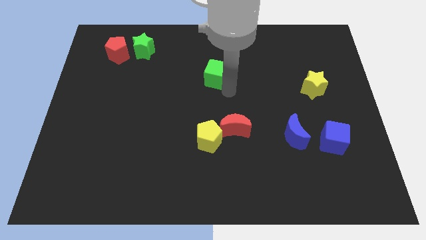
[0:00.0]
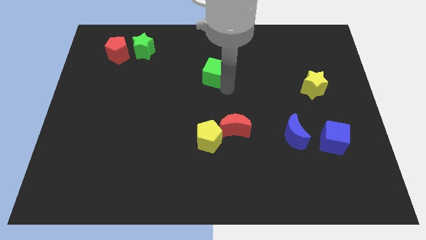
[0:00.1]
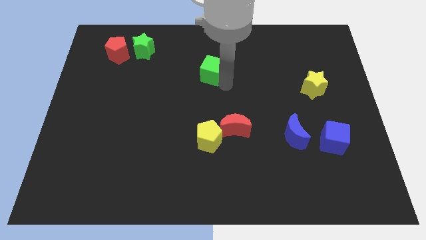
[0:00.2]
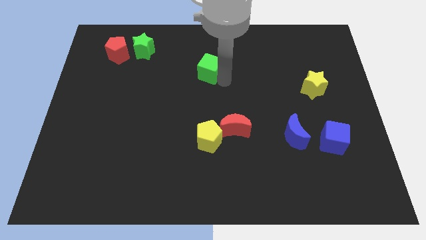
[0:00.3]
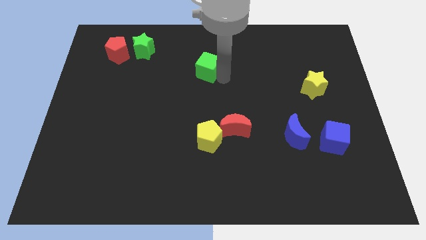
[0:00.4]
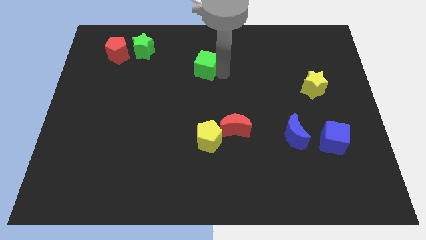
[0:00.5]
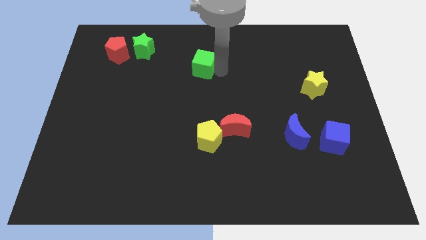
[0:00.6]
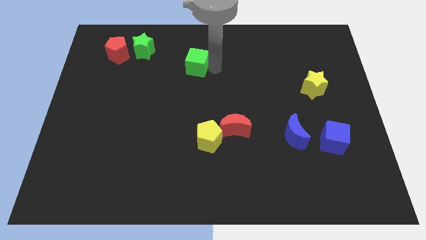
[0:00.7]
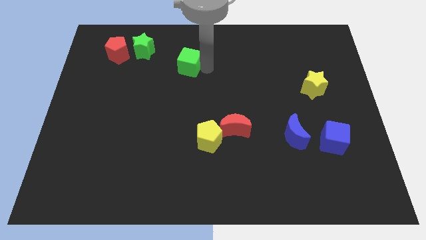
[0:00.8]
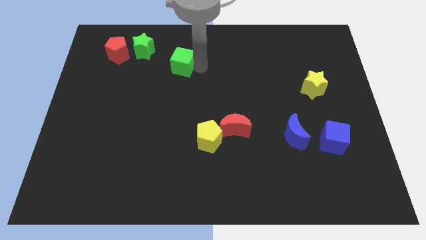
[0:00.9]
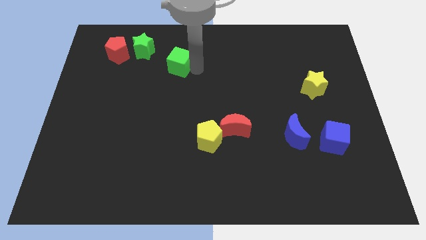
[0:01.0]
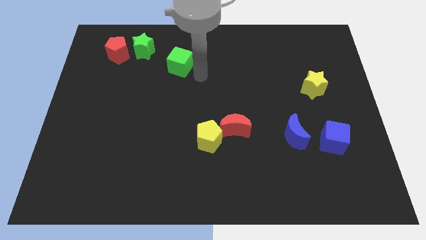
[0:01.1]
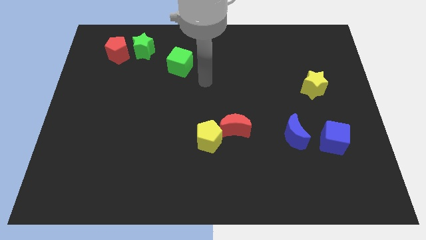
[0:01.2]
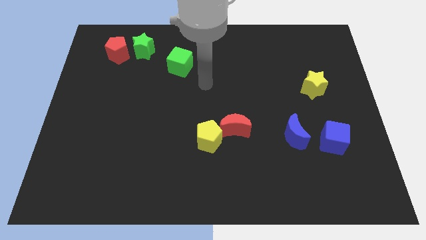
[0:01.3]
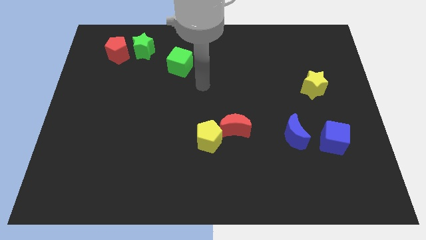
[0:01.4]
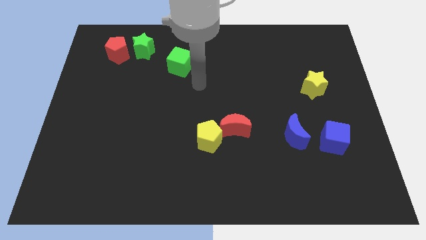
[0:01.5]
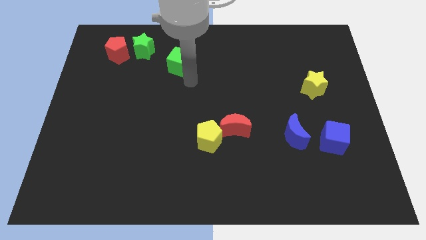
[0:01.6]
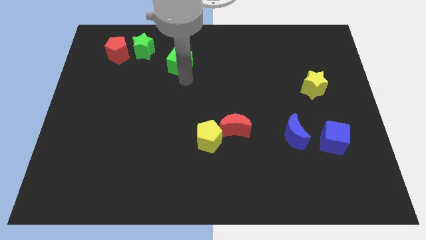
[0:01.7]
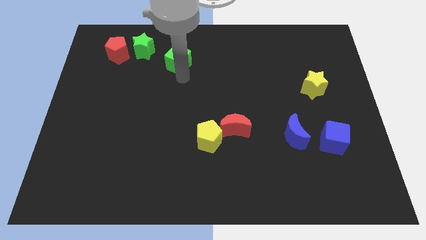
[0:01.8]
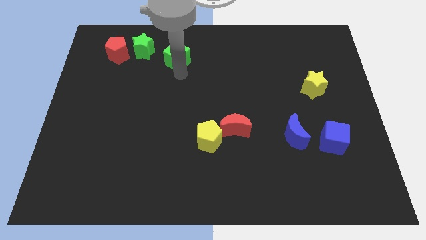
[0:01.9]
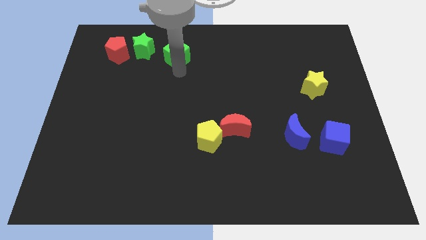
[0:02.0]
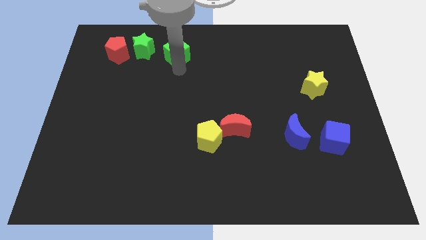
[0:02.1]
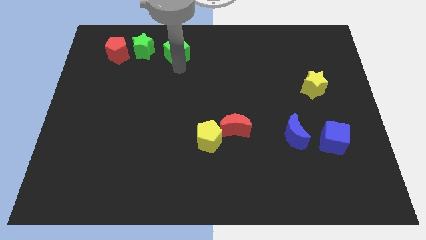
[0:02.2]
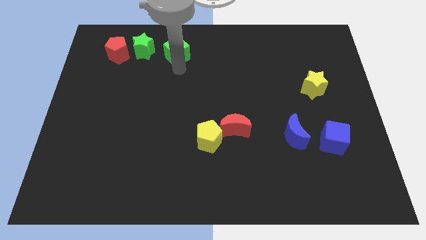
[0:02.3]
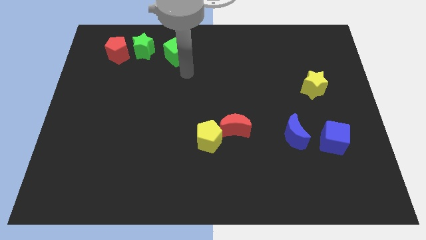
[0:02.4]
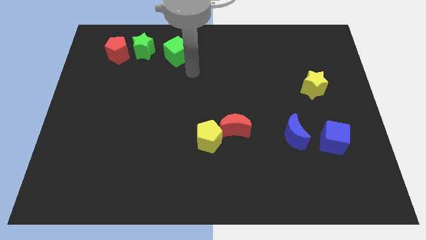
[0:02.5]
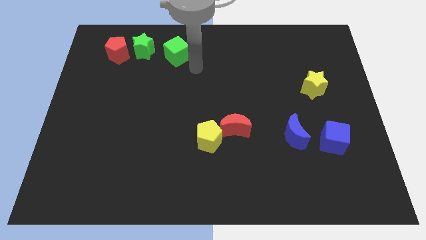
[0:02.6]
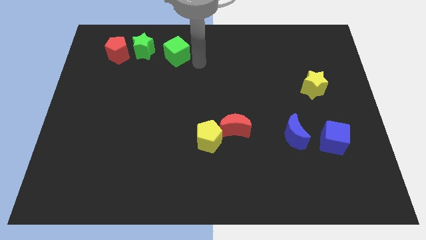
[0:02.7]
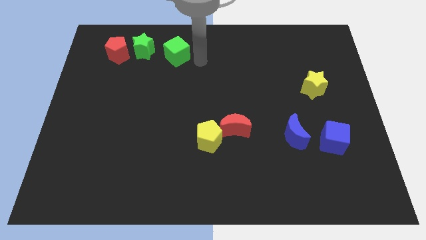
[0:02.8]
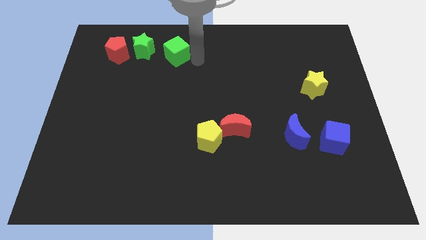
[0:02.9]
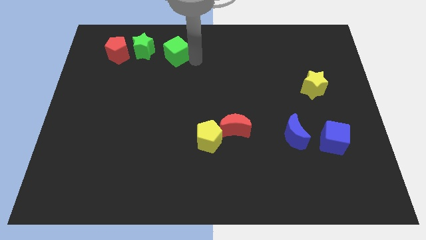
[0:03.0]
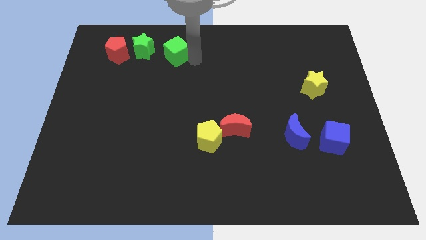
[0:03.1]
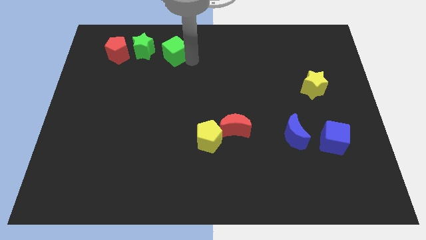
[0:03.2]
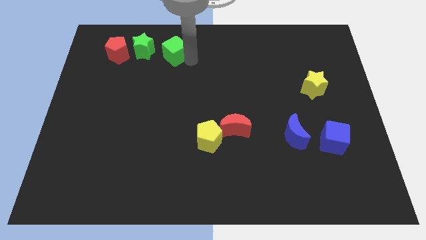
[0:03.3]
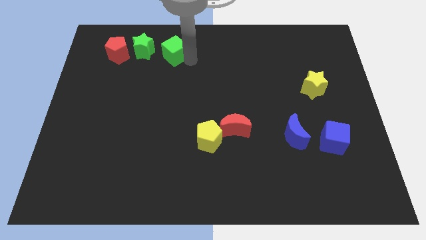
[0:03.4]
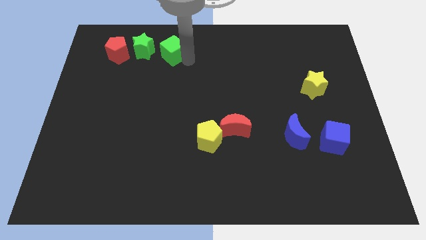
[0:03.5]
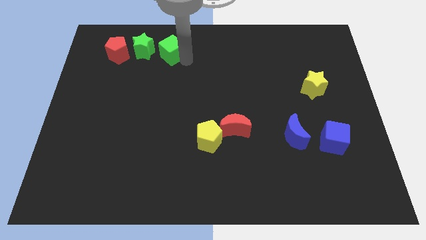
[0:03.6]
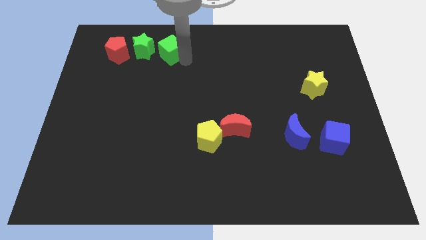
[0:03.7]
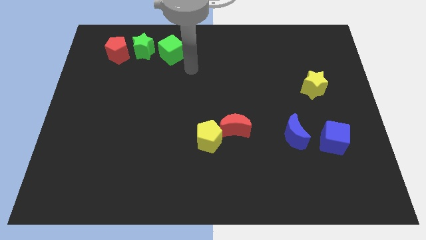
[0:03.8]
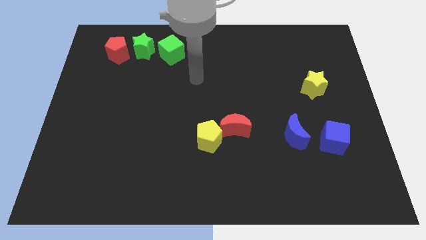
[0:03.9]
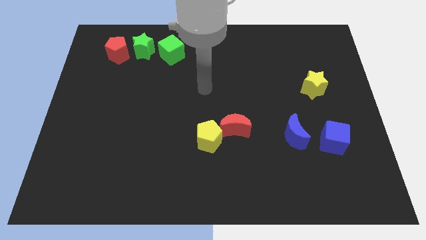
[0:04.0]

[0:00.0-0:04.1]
place the green cube towards the right side of the green star

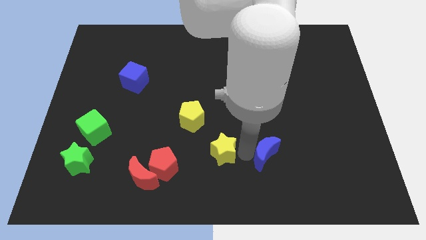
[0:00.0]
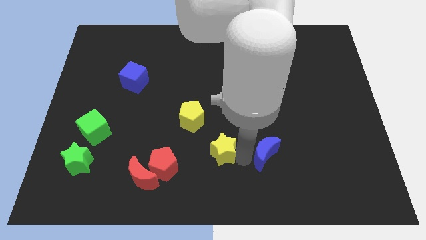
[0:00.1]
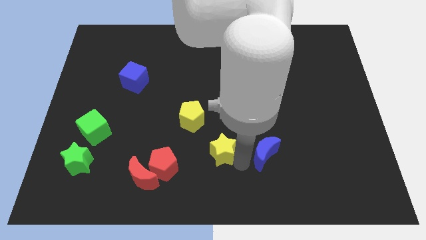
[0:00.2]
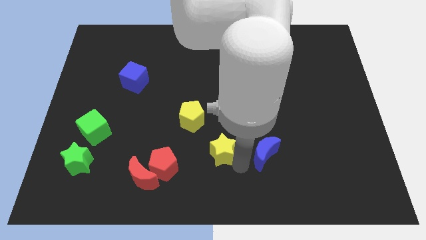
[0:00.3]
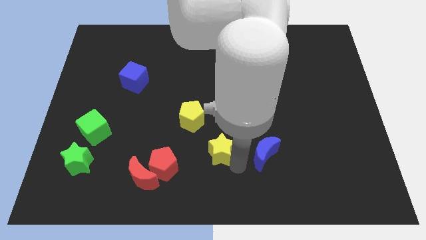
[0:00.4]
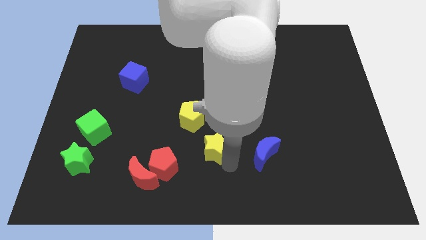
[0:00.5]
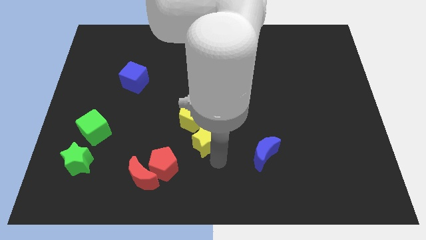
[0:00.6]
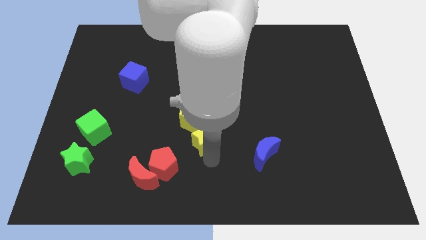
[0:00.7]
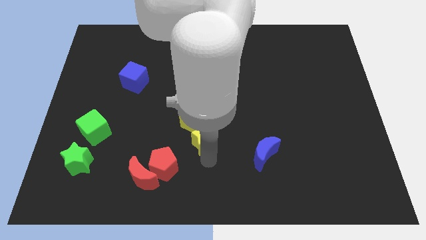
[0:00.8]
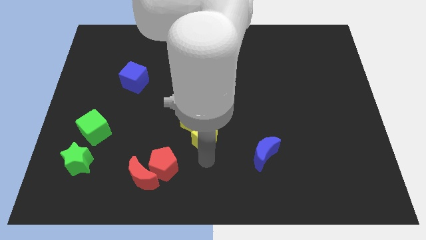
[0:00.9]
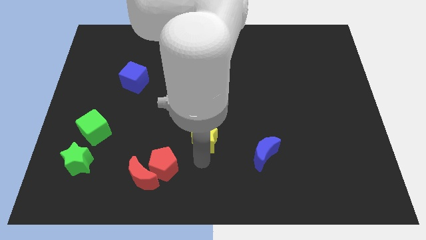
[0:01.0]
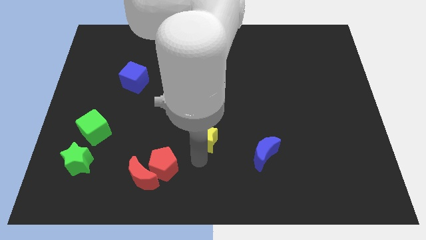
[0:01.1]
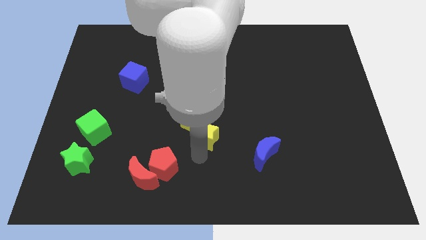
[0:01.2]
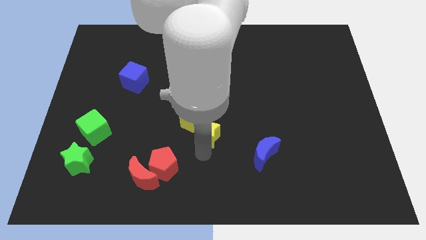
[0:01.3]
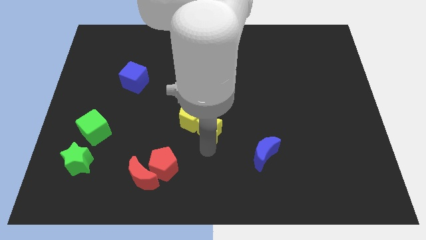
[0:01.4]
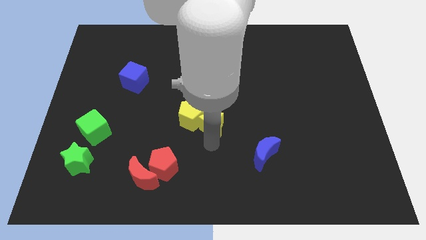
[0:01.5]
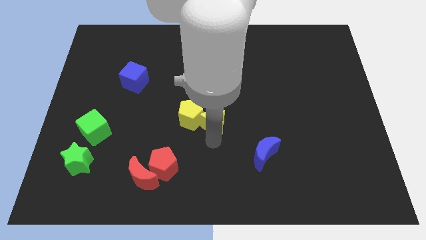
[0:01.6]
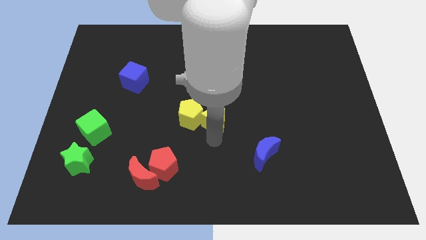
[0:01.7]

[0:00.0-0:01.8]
push the yellow star into the yellow pentagon

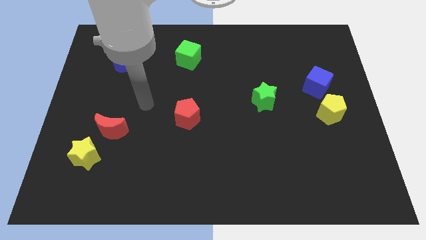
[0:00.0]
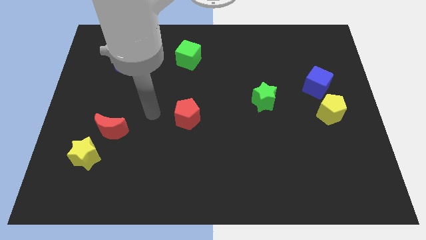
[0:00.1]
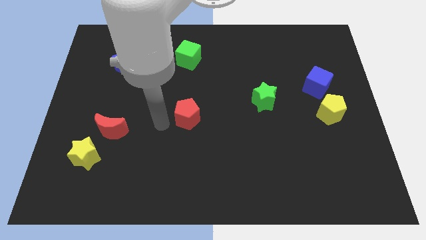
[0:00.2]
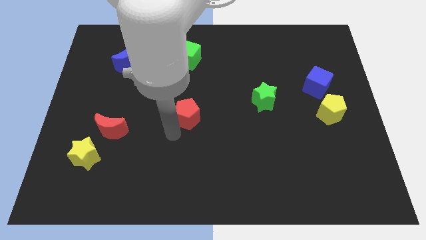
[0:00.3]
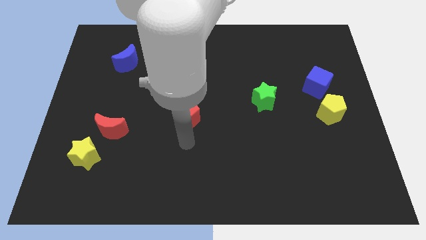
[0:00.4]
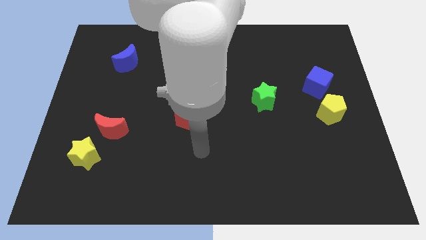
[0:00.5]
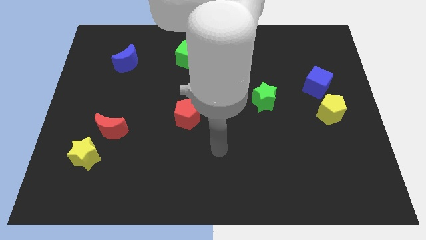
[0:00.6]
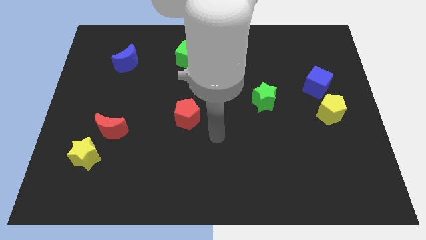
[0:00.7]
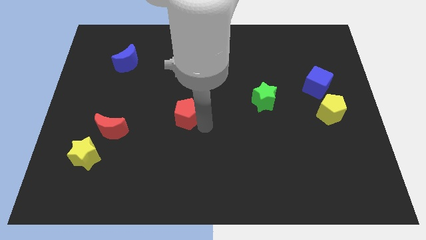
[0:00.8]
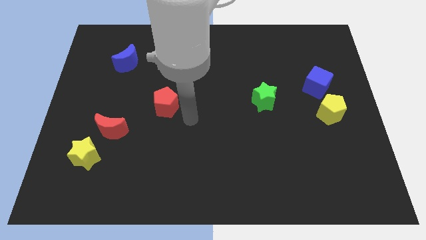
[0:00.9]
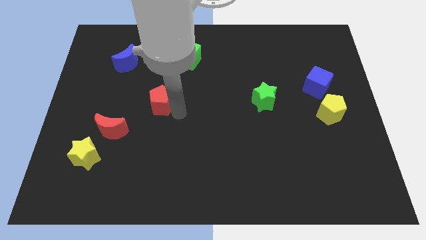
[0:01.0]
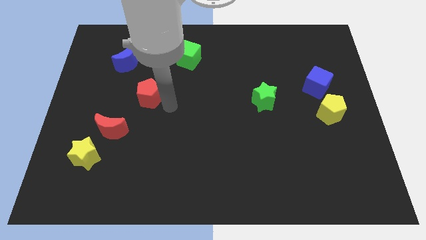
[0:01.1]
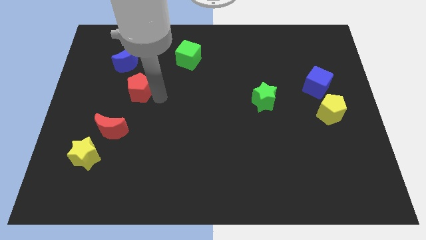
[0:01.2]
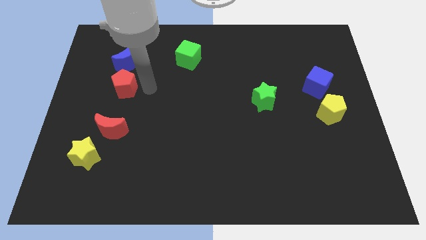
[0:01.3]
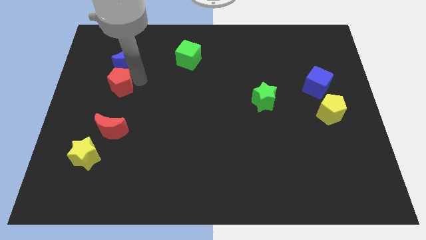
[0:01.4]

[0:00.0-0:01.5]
push the red pentagon below to the blue crescent

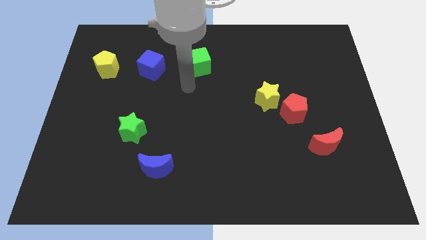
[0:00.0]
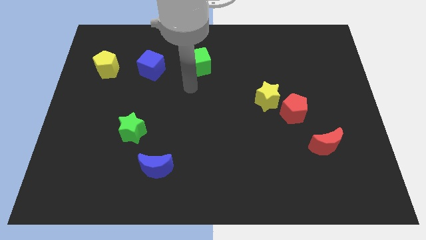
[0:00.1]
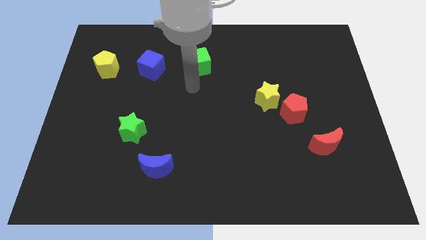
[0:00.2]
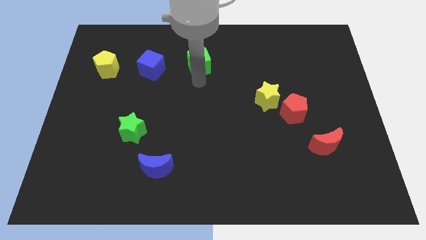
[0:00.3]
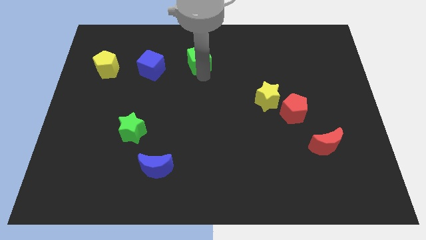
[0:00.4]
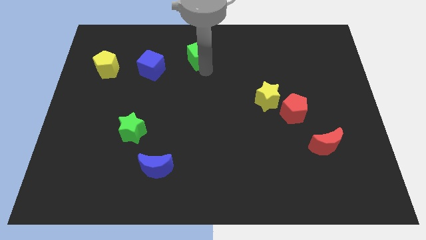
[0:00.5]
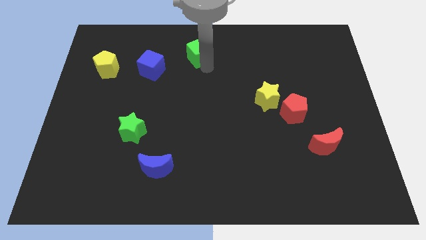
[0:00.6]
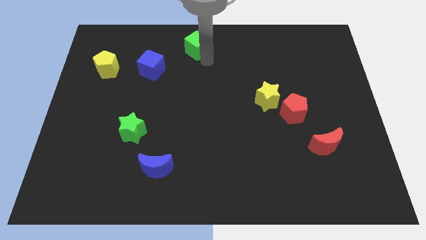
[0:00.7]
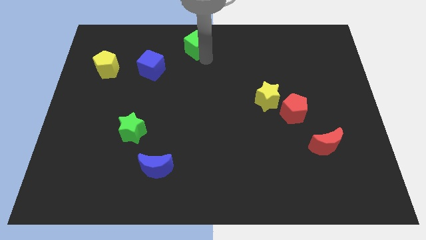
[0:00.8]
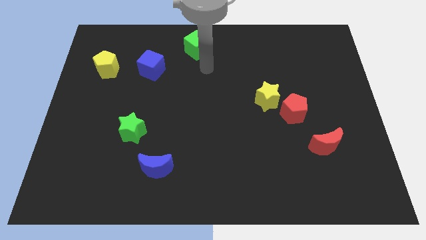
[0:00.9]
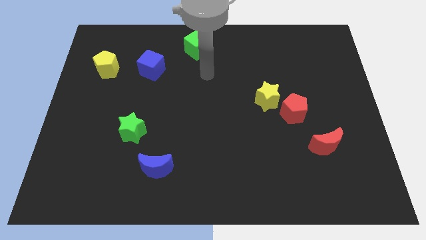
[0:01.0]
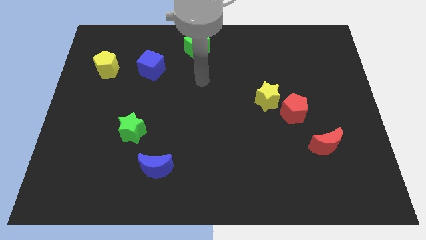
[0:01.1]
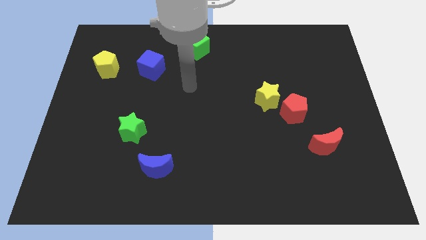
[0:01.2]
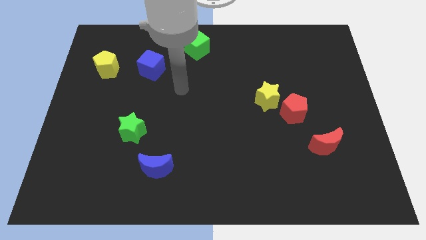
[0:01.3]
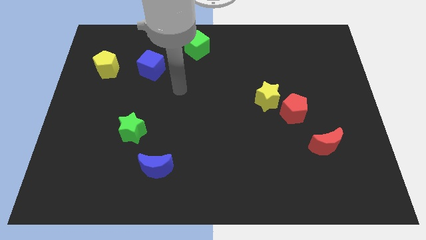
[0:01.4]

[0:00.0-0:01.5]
move green cube at center top
